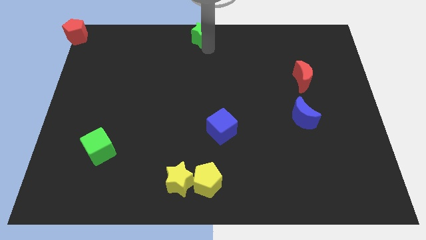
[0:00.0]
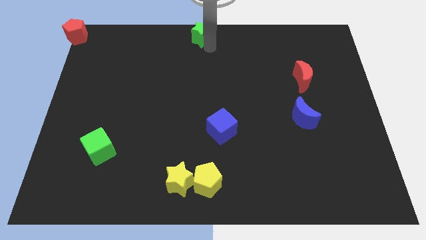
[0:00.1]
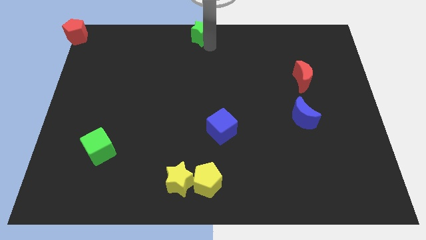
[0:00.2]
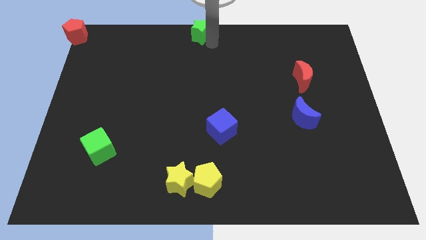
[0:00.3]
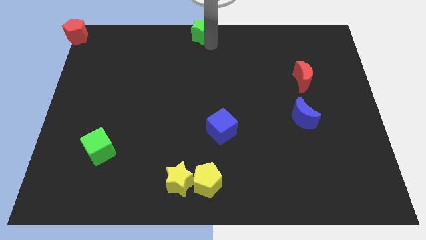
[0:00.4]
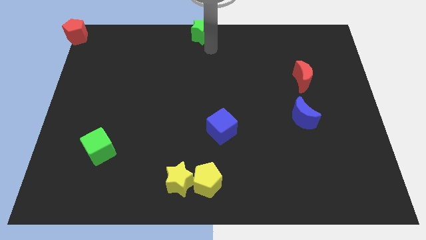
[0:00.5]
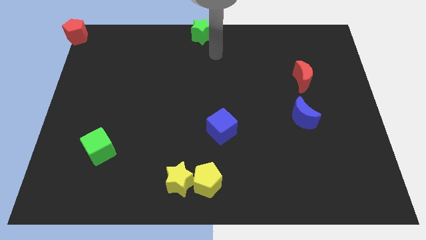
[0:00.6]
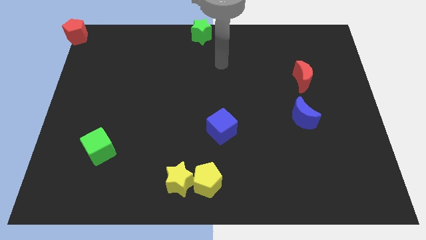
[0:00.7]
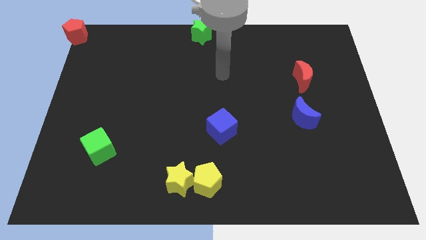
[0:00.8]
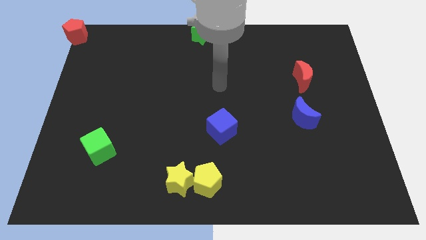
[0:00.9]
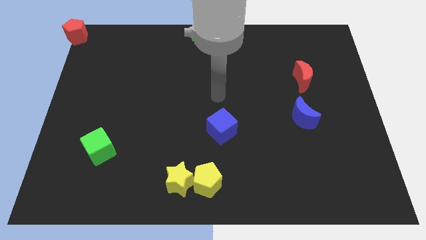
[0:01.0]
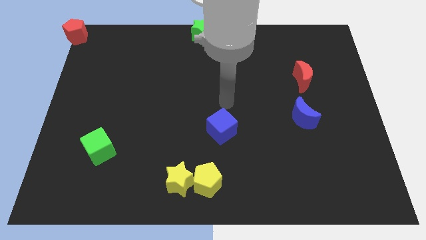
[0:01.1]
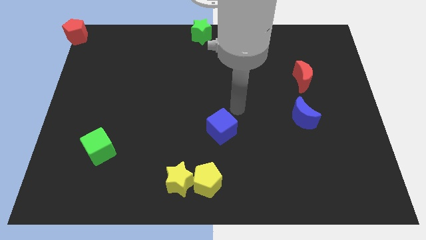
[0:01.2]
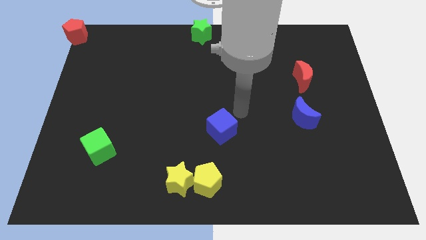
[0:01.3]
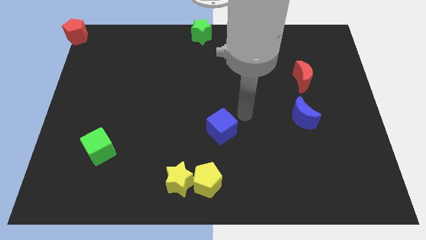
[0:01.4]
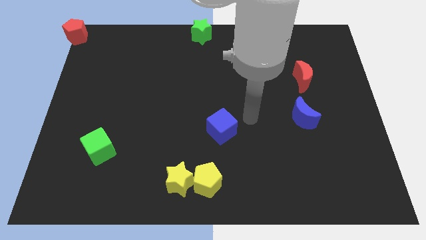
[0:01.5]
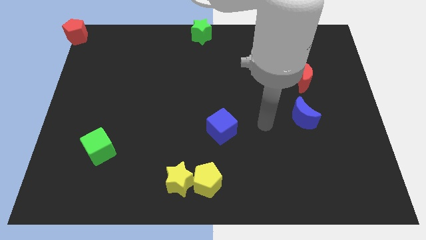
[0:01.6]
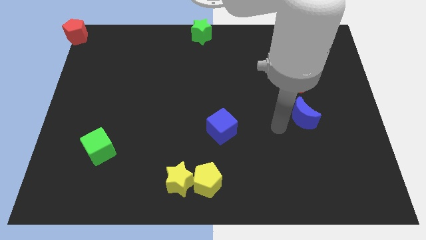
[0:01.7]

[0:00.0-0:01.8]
place your arm between the blue blocks

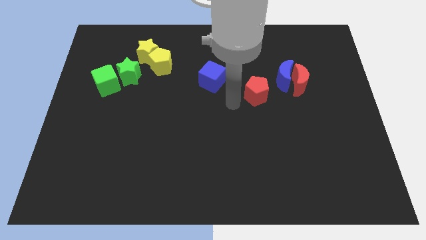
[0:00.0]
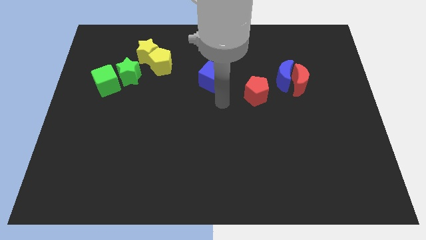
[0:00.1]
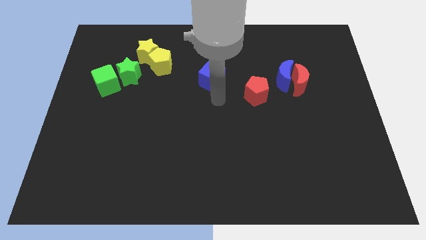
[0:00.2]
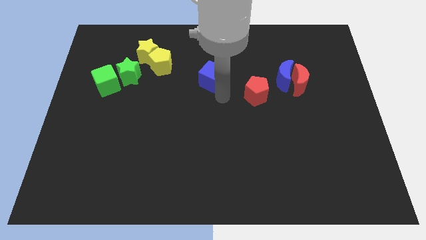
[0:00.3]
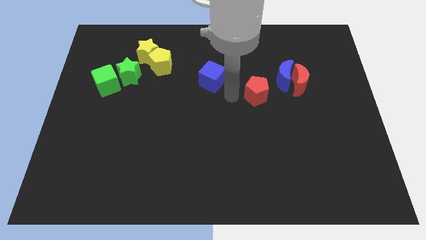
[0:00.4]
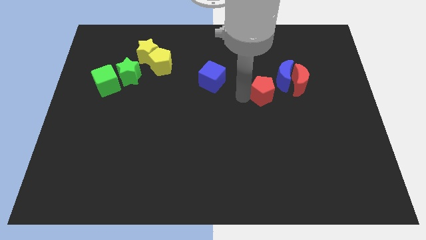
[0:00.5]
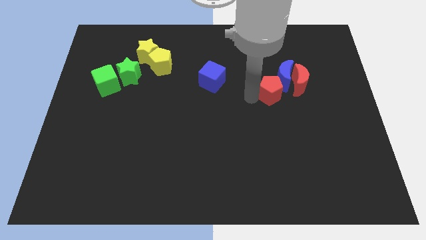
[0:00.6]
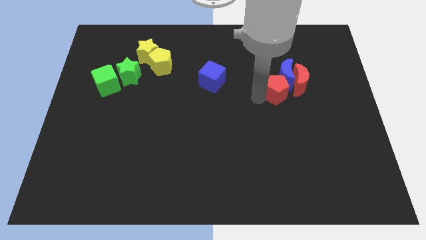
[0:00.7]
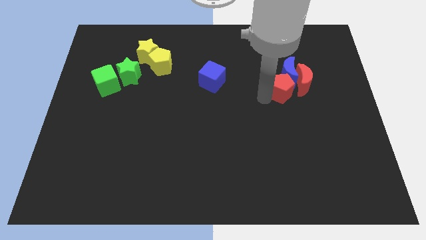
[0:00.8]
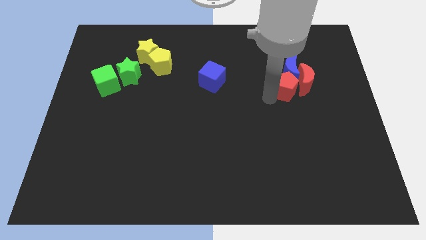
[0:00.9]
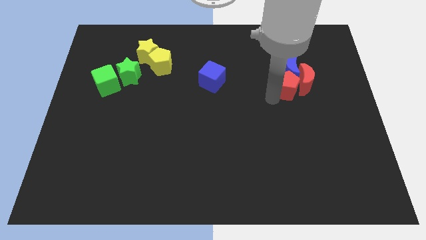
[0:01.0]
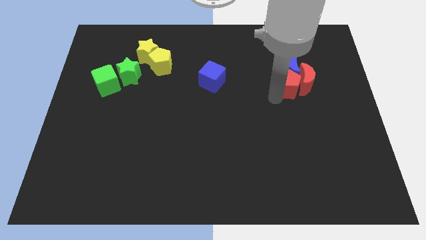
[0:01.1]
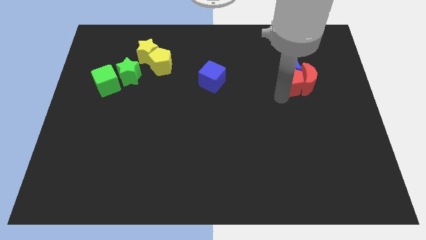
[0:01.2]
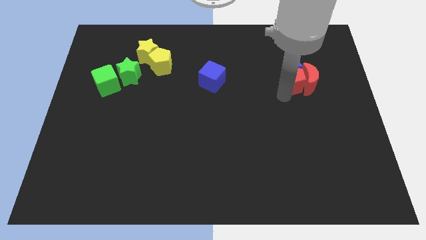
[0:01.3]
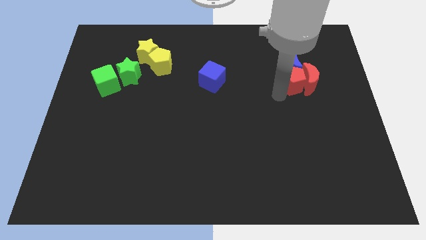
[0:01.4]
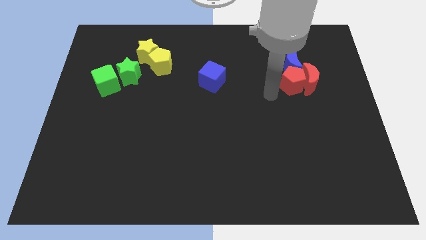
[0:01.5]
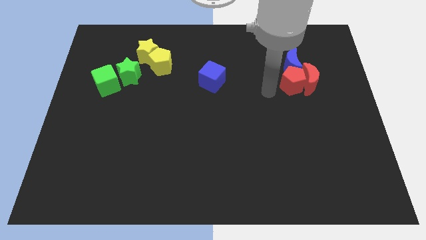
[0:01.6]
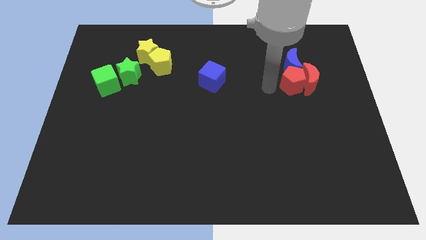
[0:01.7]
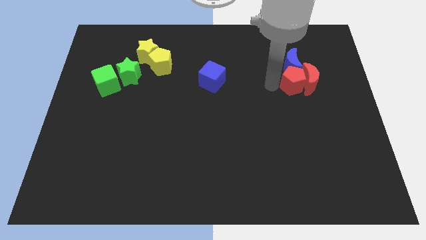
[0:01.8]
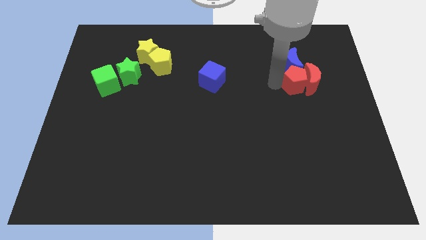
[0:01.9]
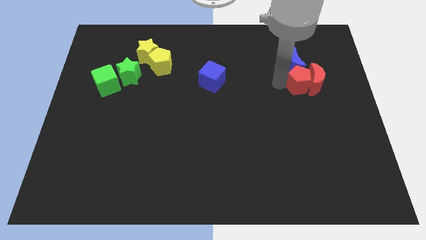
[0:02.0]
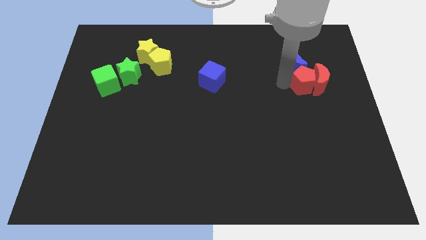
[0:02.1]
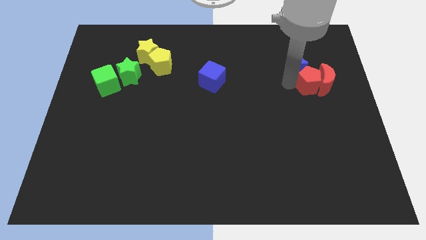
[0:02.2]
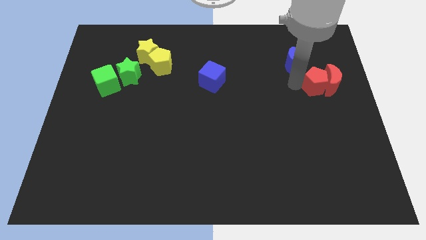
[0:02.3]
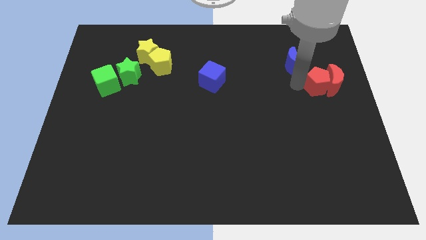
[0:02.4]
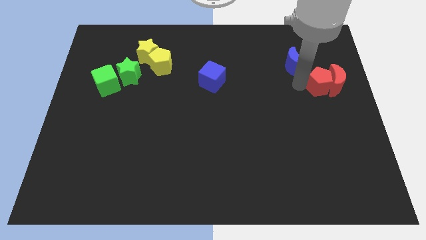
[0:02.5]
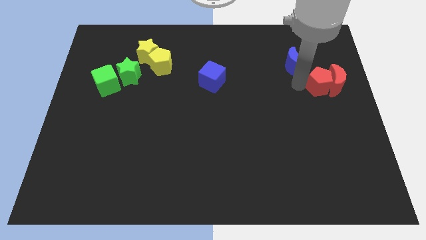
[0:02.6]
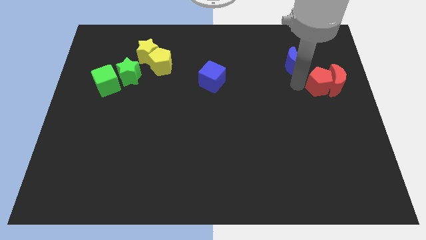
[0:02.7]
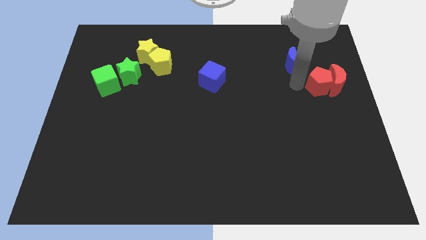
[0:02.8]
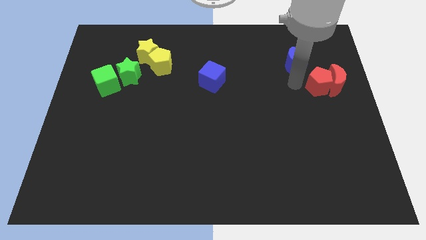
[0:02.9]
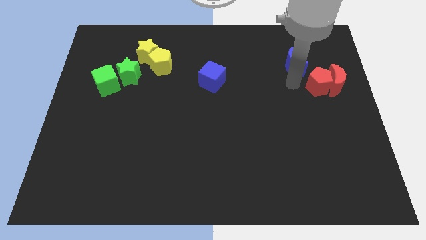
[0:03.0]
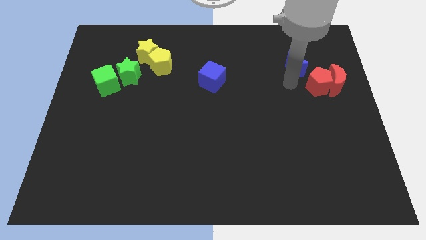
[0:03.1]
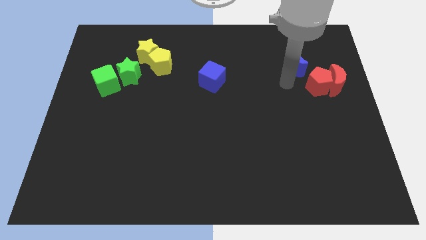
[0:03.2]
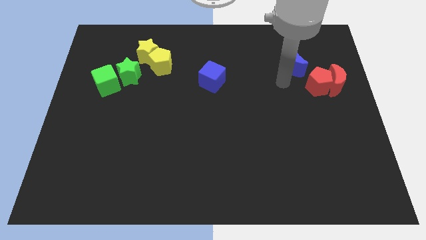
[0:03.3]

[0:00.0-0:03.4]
push the red pentagon to the left side of the blue crescent

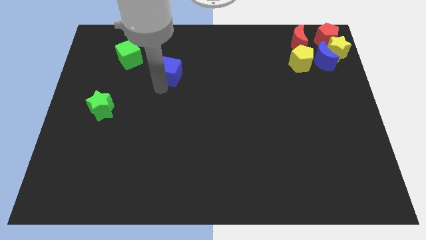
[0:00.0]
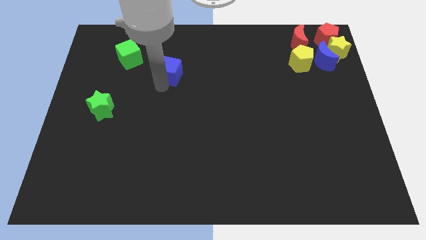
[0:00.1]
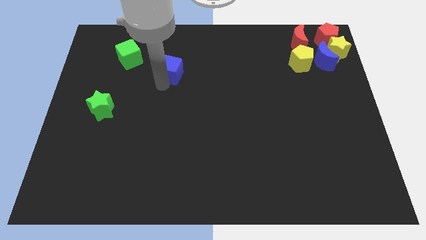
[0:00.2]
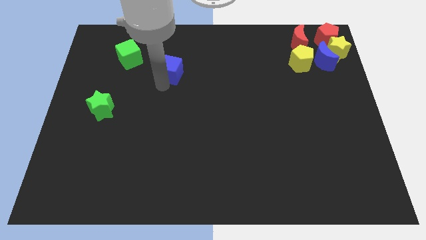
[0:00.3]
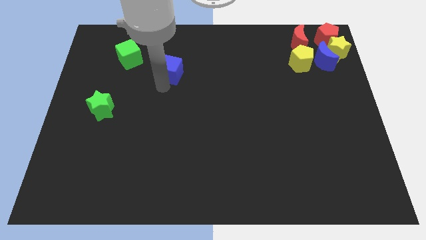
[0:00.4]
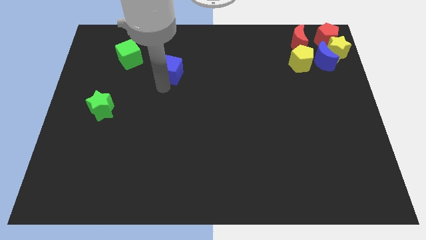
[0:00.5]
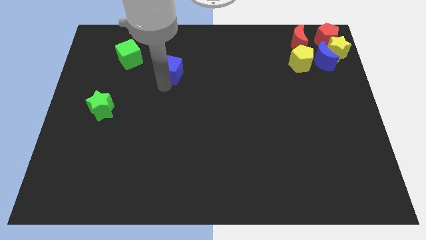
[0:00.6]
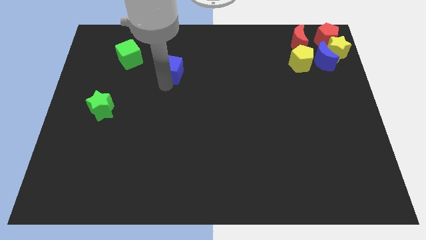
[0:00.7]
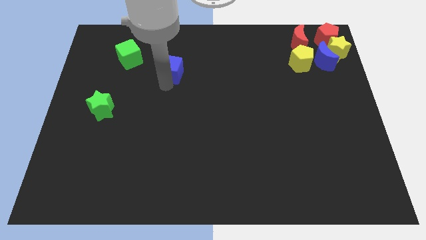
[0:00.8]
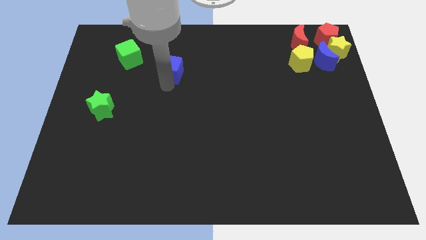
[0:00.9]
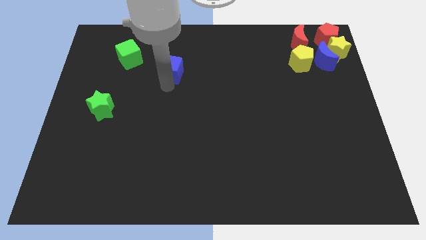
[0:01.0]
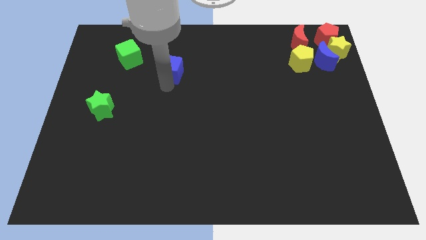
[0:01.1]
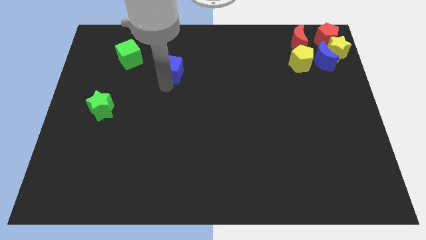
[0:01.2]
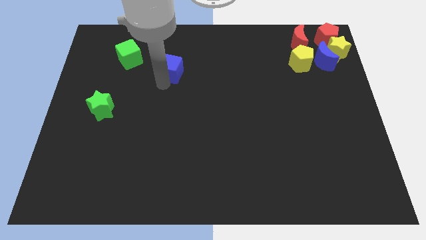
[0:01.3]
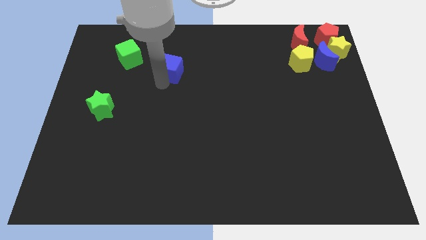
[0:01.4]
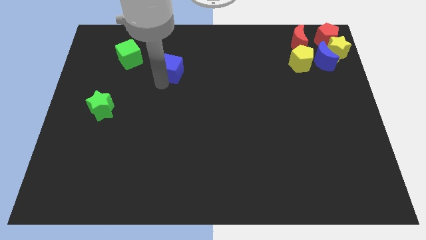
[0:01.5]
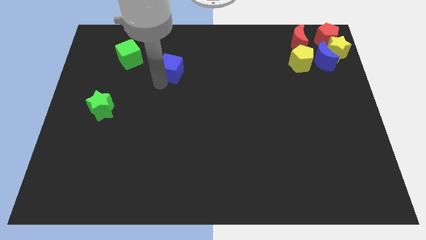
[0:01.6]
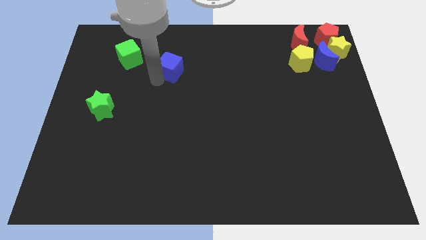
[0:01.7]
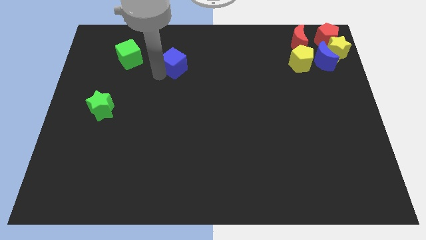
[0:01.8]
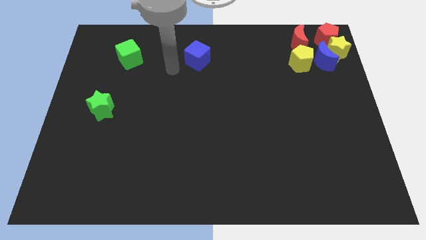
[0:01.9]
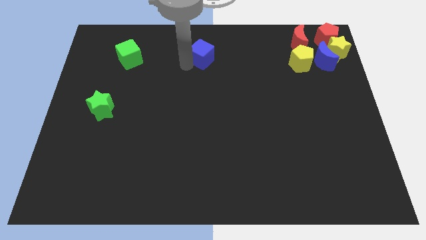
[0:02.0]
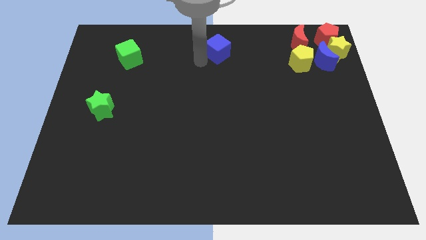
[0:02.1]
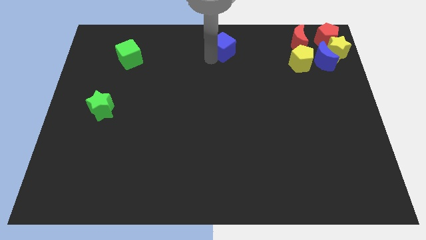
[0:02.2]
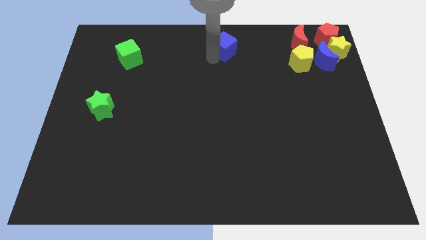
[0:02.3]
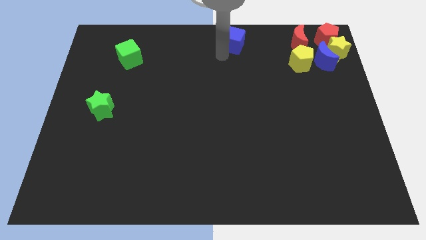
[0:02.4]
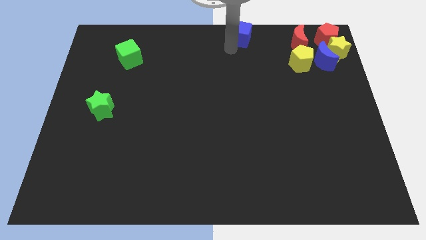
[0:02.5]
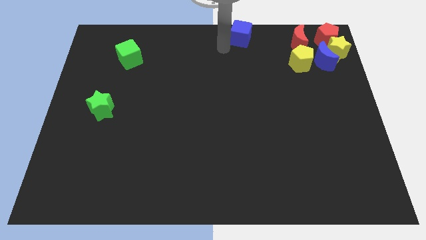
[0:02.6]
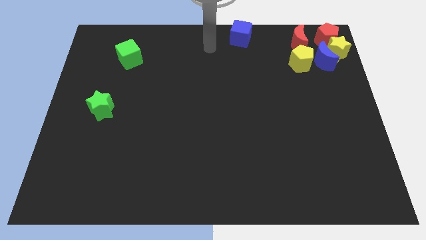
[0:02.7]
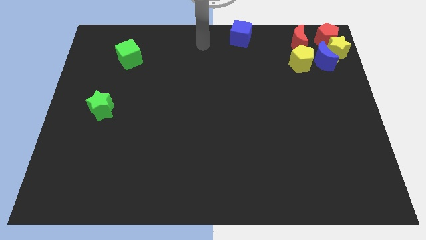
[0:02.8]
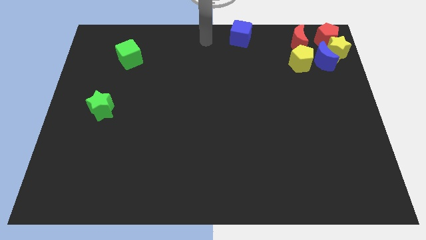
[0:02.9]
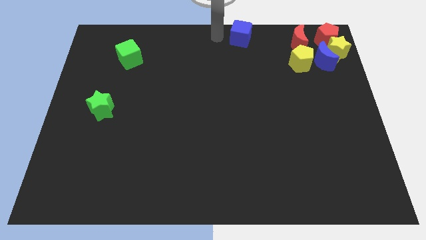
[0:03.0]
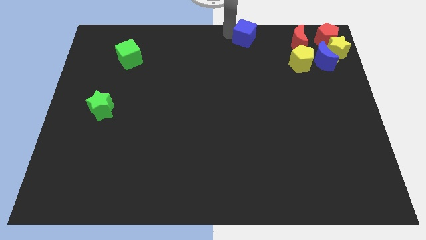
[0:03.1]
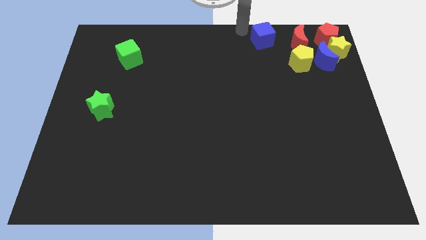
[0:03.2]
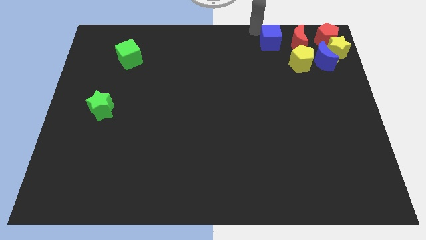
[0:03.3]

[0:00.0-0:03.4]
place the blue cube left to the red crescent to form a horizontal line

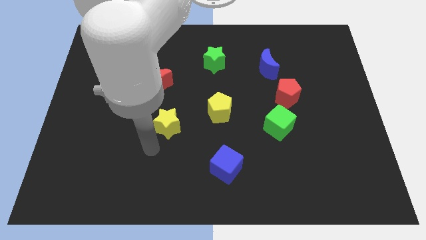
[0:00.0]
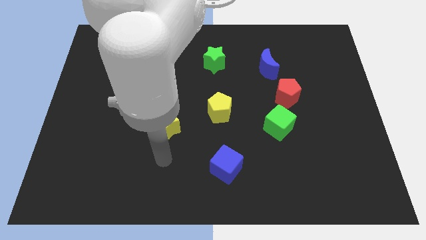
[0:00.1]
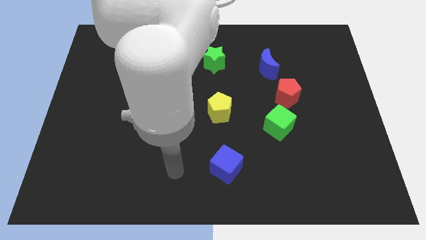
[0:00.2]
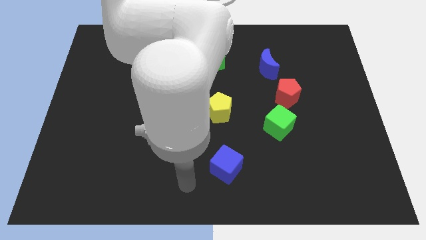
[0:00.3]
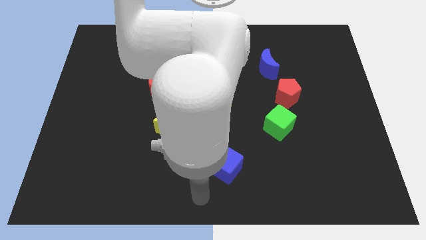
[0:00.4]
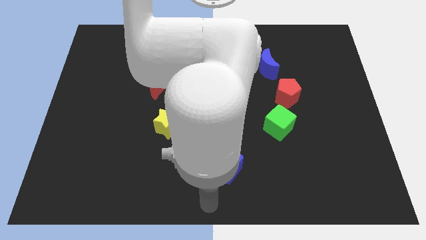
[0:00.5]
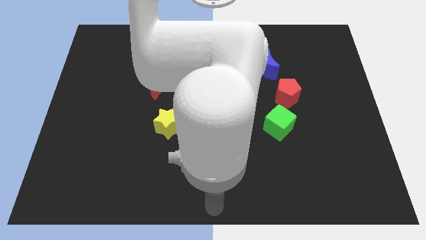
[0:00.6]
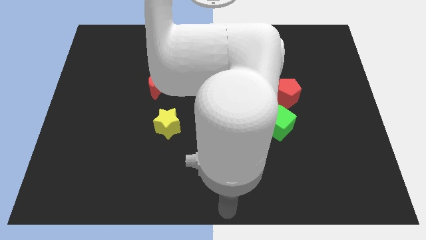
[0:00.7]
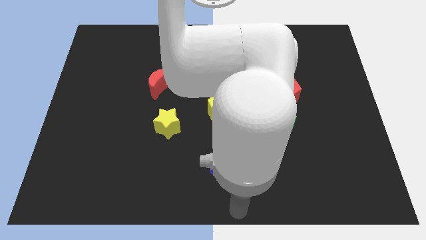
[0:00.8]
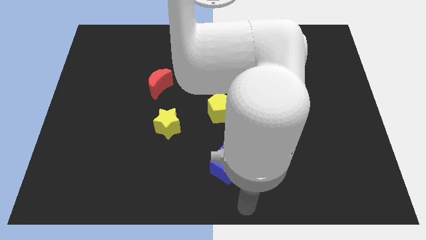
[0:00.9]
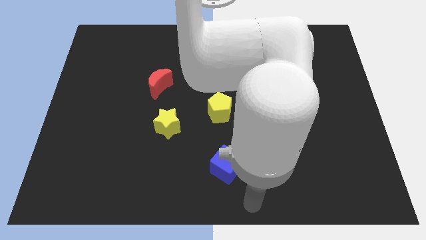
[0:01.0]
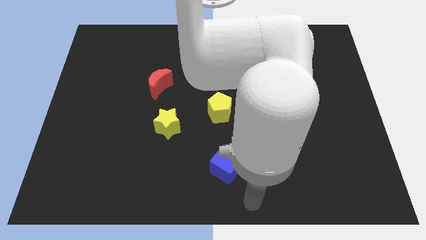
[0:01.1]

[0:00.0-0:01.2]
move your arm away from the yellow star
